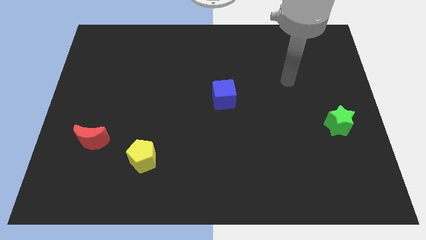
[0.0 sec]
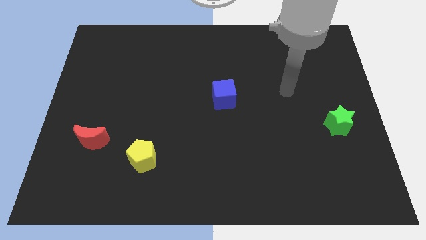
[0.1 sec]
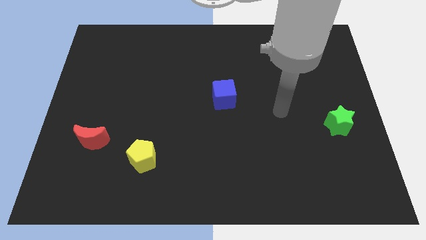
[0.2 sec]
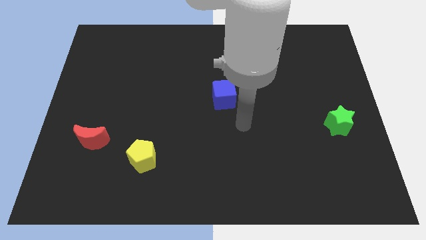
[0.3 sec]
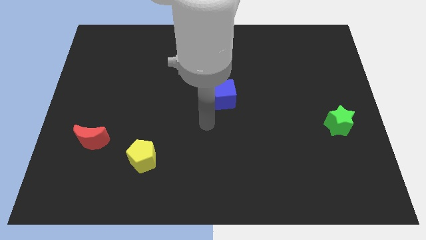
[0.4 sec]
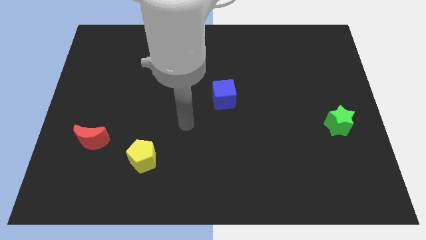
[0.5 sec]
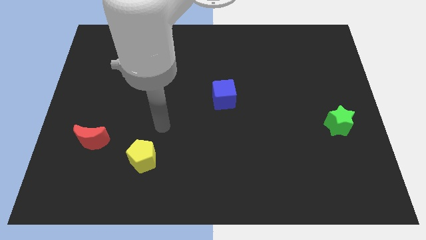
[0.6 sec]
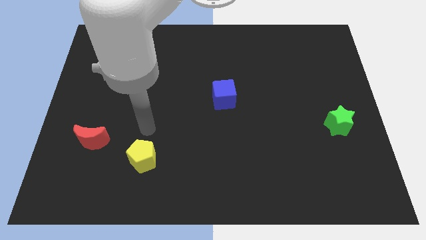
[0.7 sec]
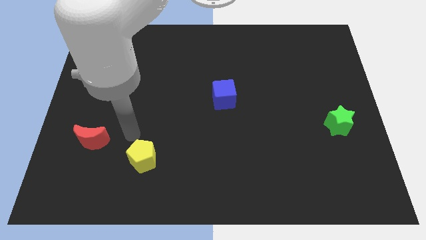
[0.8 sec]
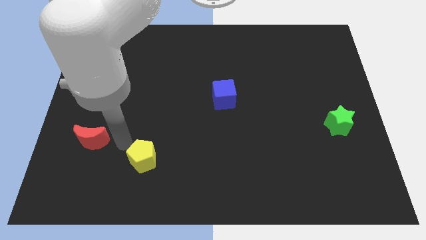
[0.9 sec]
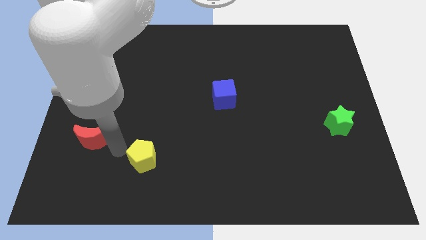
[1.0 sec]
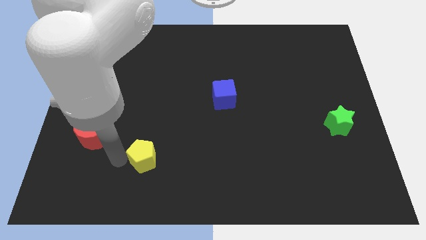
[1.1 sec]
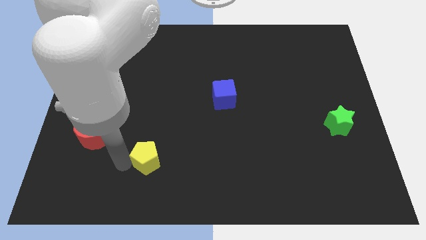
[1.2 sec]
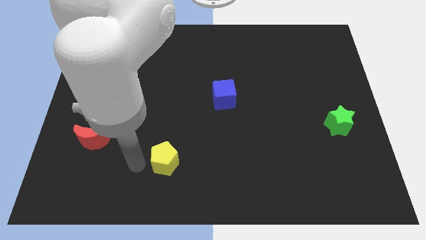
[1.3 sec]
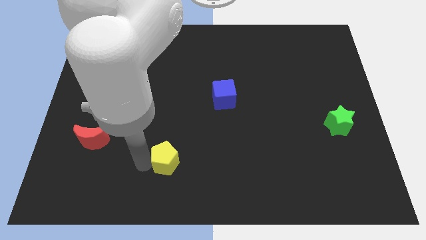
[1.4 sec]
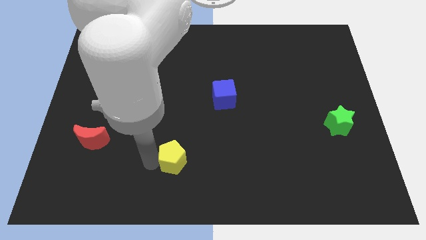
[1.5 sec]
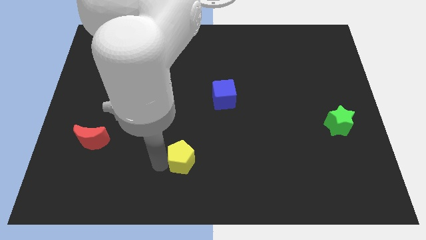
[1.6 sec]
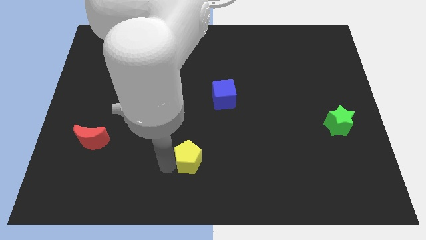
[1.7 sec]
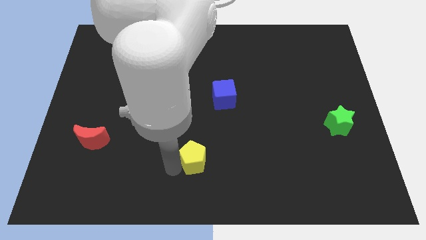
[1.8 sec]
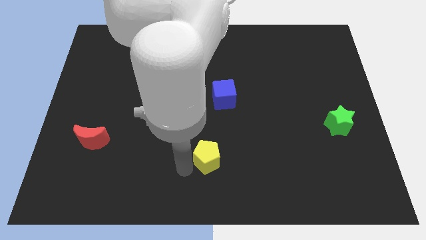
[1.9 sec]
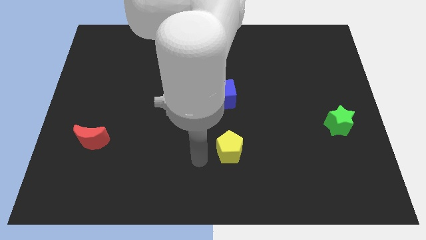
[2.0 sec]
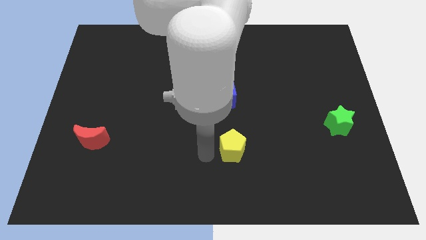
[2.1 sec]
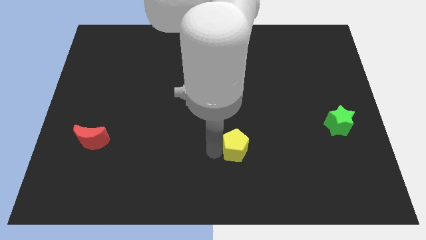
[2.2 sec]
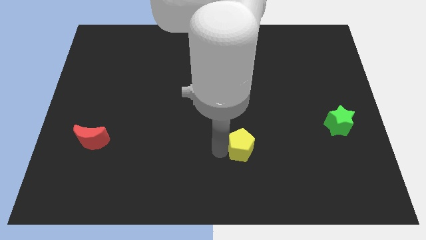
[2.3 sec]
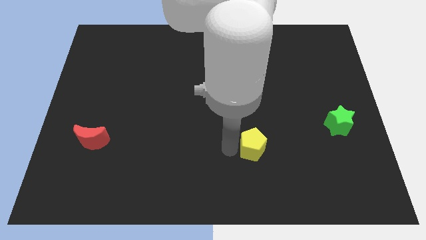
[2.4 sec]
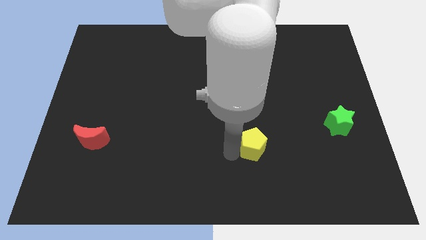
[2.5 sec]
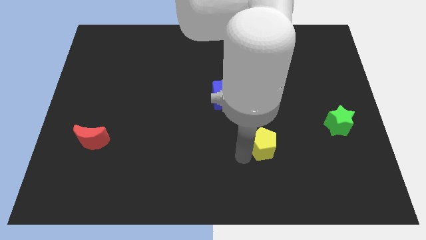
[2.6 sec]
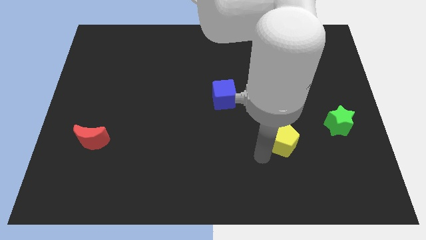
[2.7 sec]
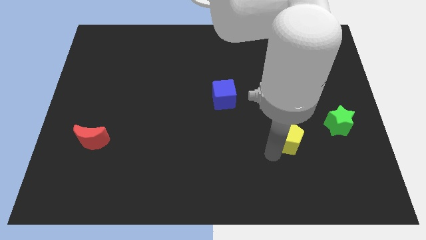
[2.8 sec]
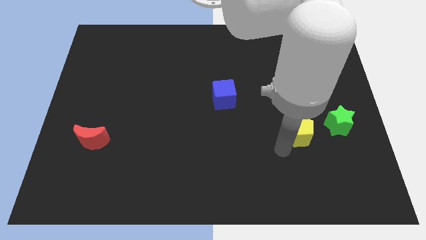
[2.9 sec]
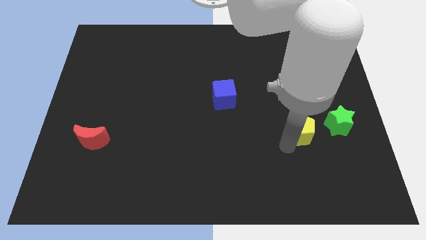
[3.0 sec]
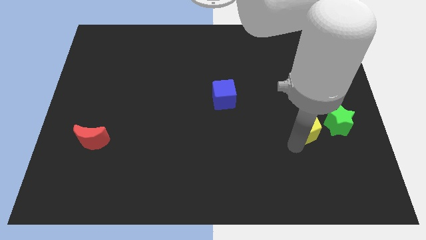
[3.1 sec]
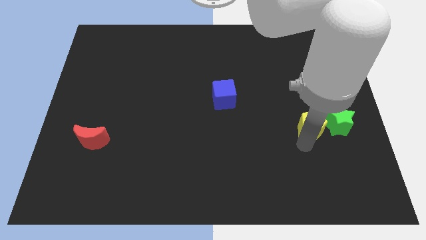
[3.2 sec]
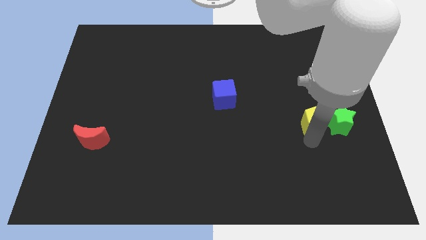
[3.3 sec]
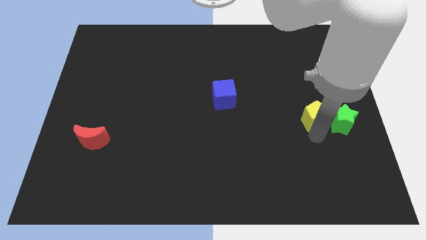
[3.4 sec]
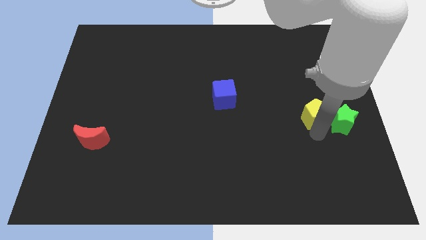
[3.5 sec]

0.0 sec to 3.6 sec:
slide the pentagon close to the star

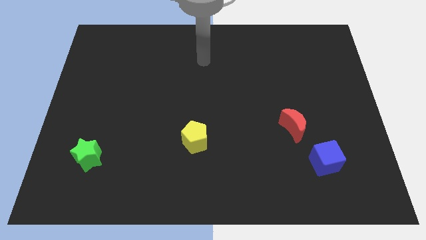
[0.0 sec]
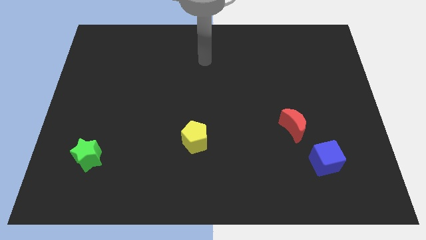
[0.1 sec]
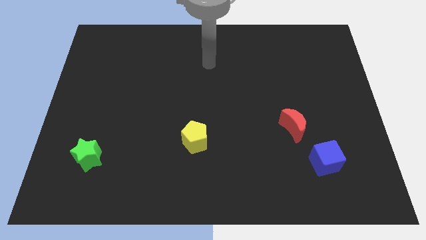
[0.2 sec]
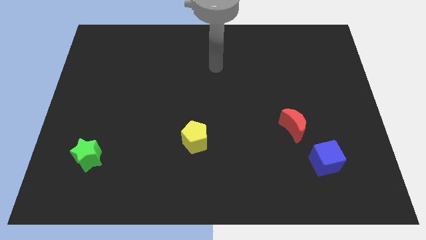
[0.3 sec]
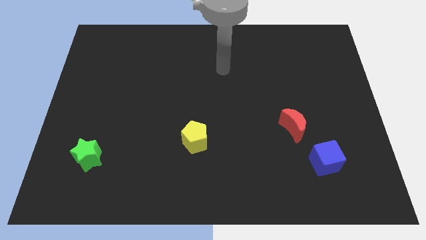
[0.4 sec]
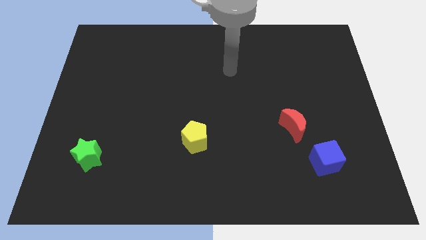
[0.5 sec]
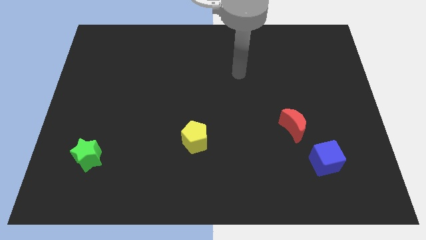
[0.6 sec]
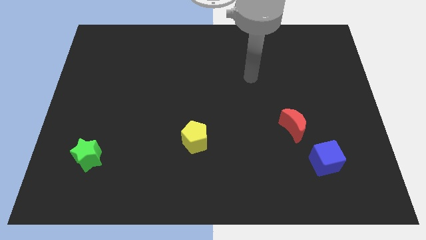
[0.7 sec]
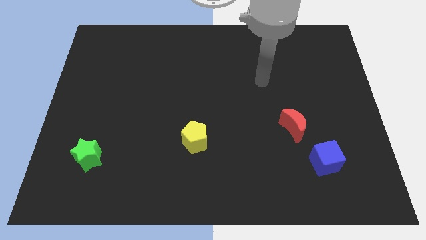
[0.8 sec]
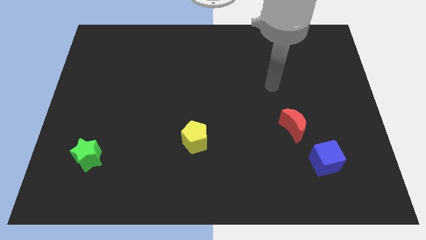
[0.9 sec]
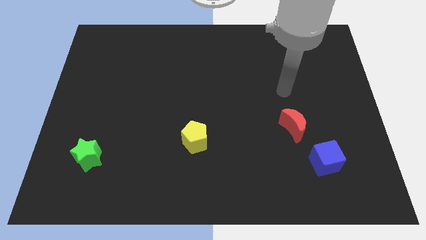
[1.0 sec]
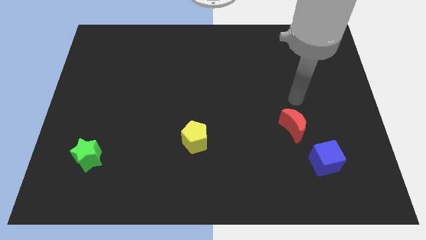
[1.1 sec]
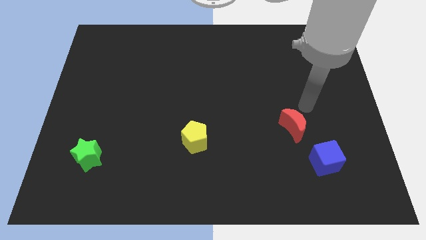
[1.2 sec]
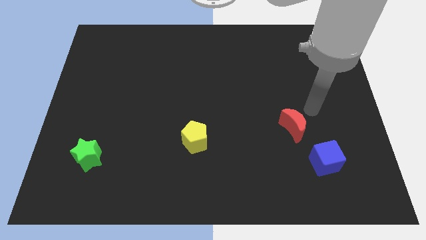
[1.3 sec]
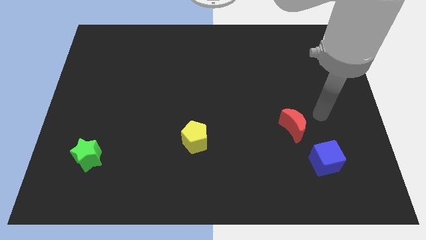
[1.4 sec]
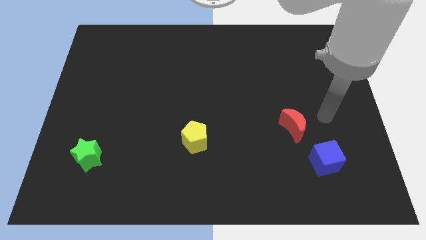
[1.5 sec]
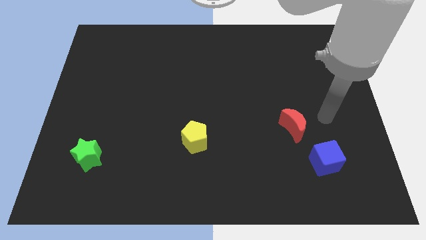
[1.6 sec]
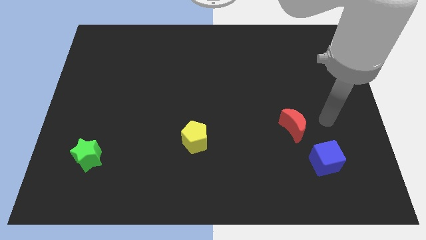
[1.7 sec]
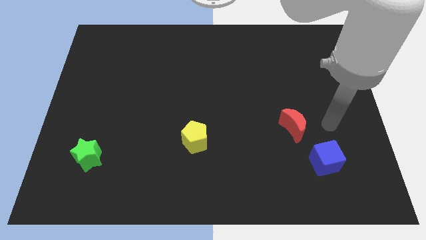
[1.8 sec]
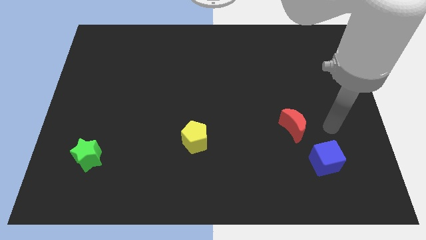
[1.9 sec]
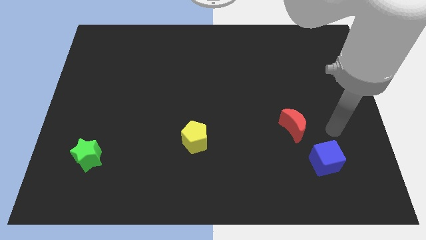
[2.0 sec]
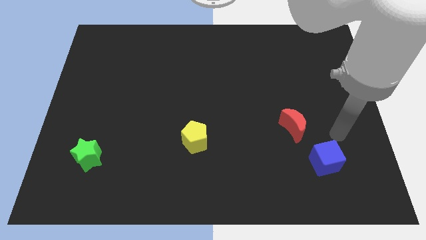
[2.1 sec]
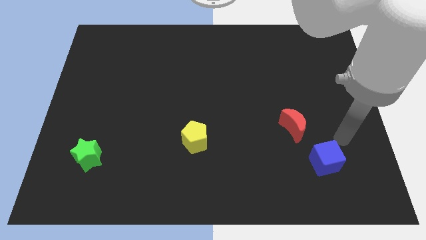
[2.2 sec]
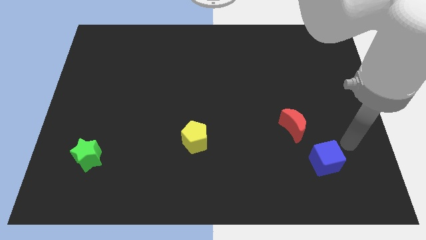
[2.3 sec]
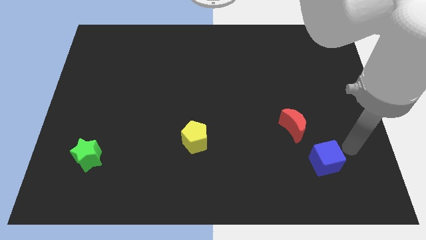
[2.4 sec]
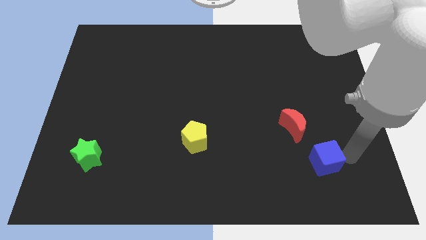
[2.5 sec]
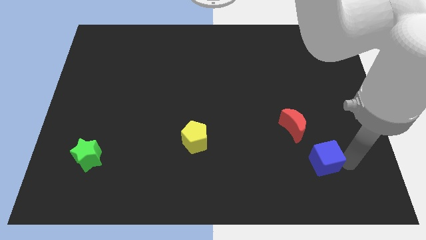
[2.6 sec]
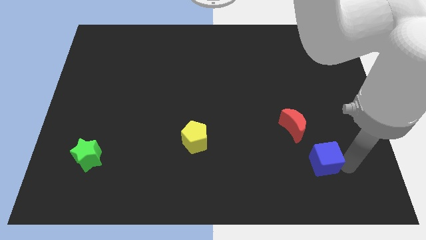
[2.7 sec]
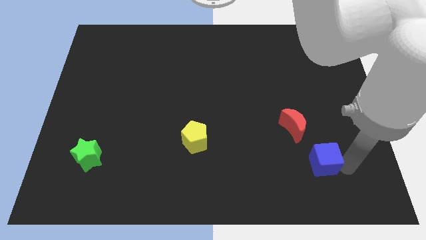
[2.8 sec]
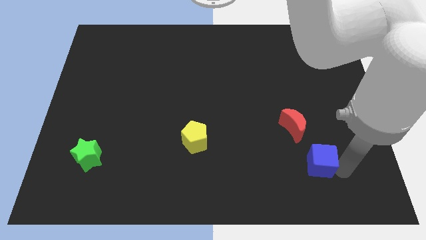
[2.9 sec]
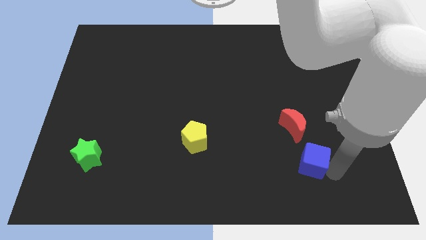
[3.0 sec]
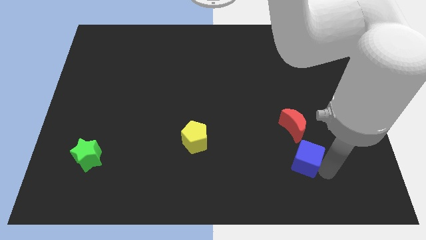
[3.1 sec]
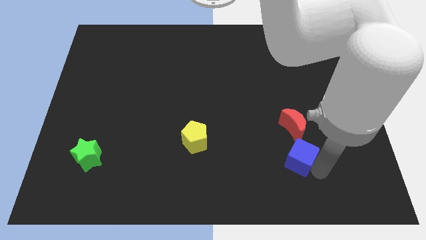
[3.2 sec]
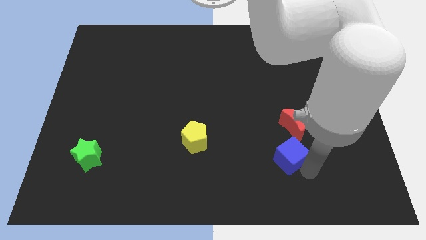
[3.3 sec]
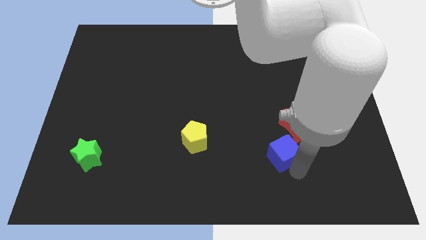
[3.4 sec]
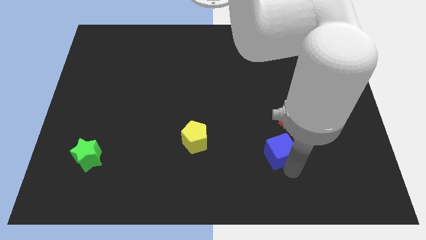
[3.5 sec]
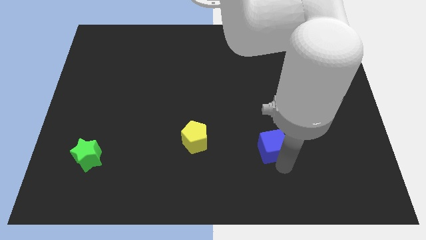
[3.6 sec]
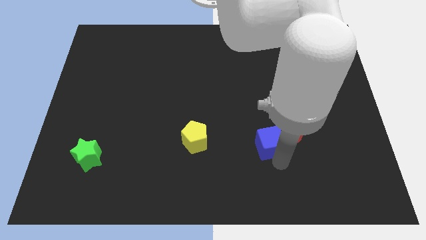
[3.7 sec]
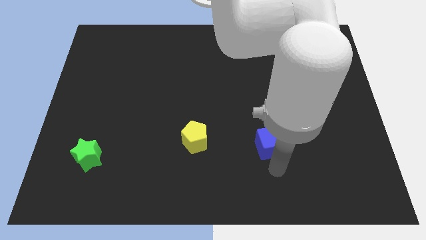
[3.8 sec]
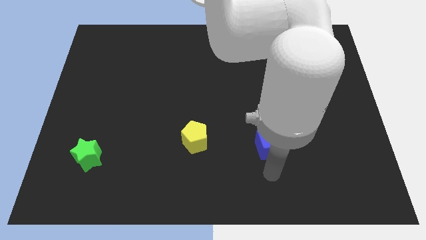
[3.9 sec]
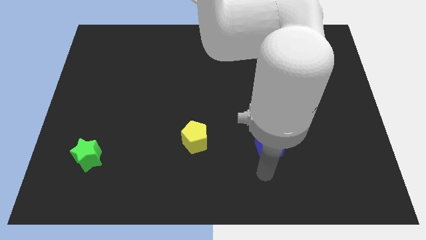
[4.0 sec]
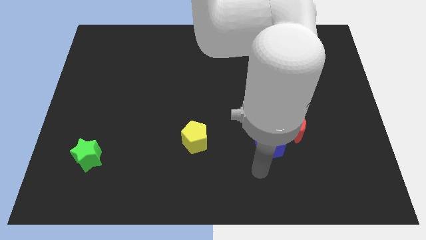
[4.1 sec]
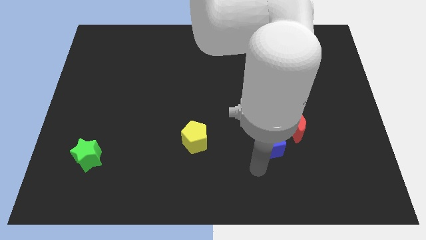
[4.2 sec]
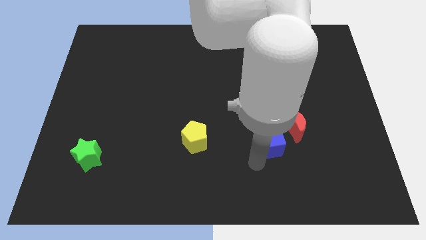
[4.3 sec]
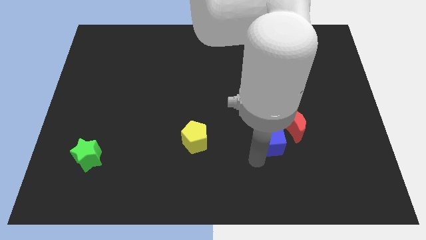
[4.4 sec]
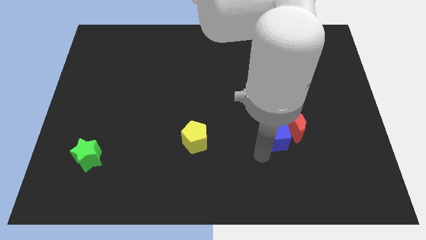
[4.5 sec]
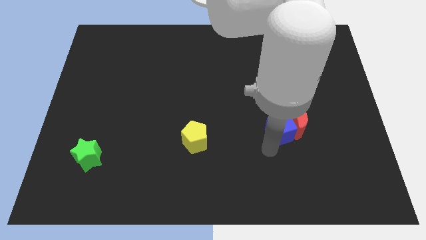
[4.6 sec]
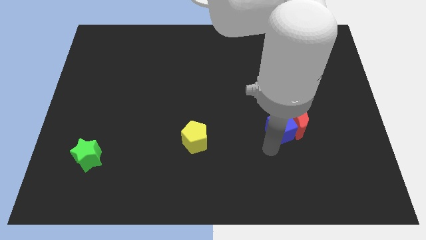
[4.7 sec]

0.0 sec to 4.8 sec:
put the blue cube to the moon

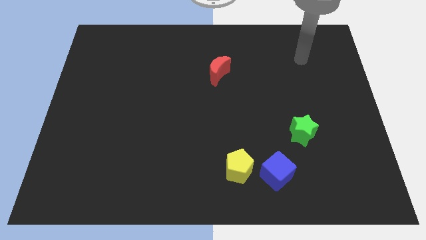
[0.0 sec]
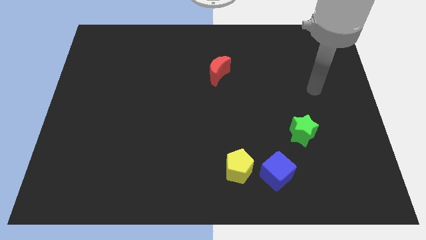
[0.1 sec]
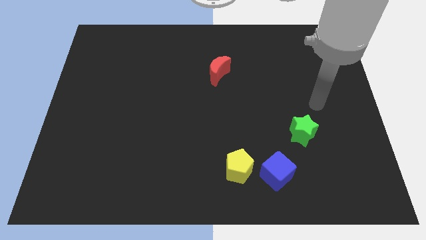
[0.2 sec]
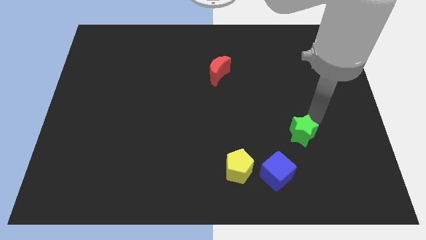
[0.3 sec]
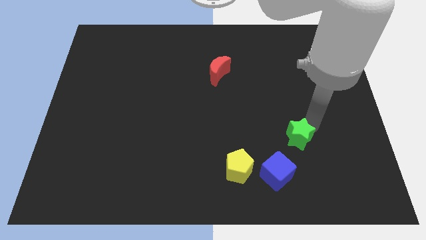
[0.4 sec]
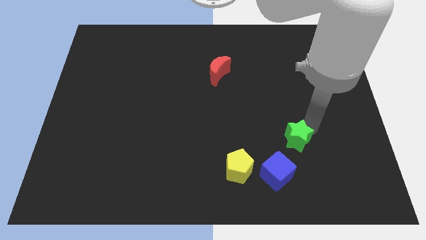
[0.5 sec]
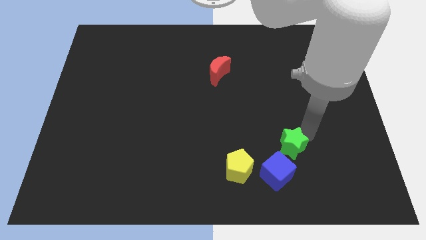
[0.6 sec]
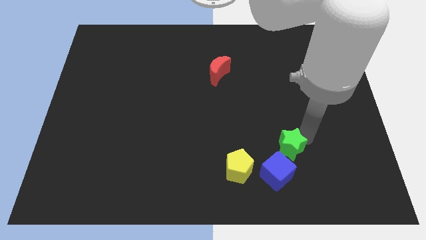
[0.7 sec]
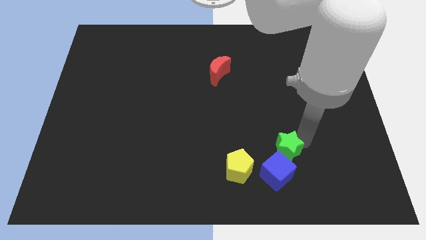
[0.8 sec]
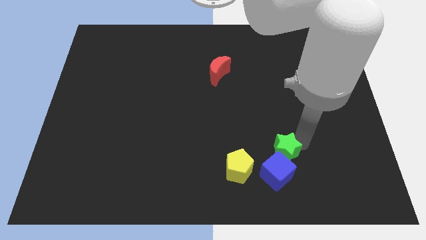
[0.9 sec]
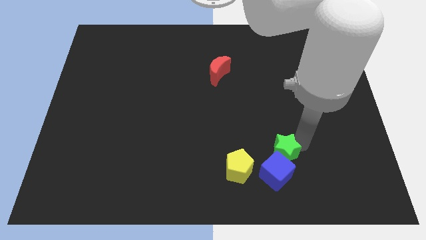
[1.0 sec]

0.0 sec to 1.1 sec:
slide the green block close to the blue block
